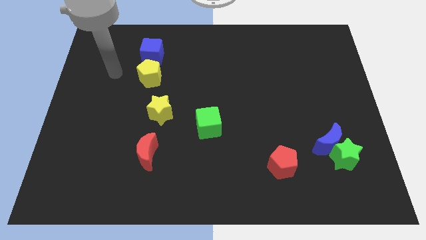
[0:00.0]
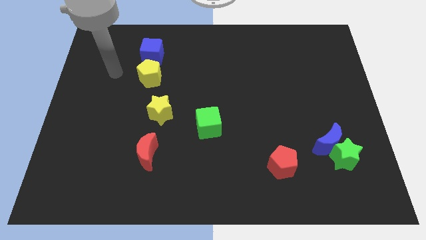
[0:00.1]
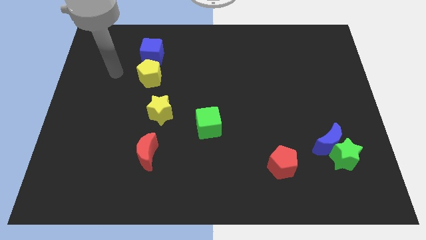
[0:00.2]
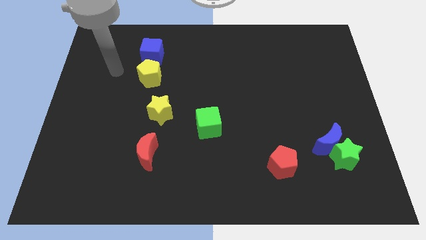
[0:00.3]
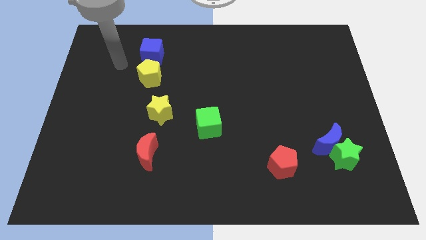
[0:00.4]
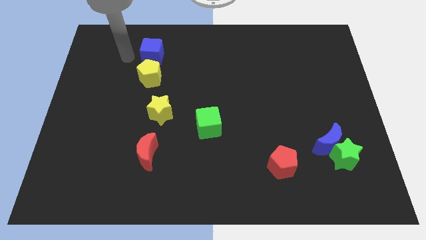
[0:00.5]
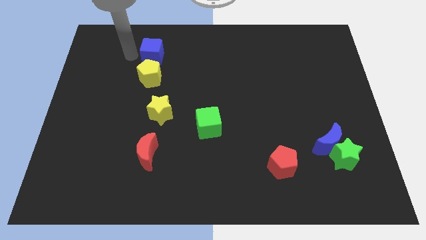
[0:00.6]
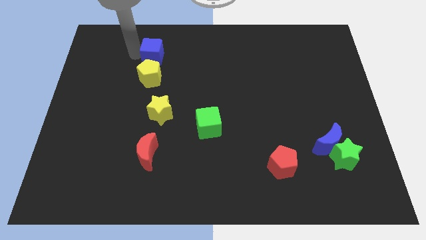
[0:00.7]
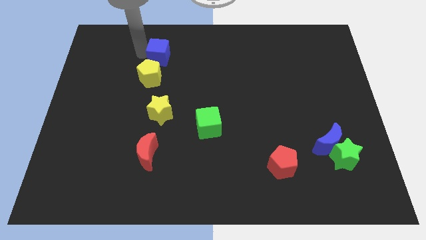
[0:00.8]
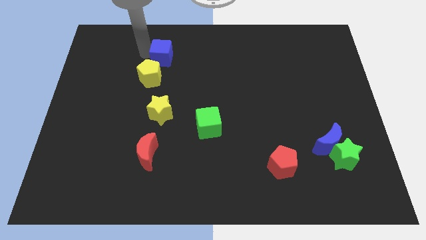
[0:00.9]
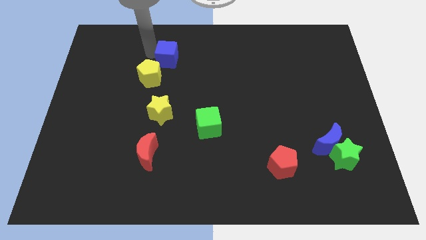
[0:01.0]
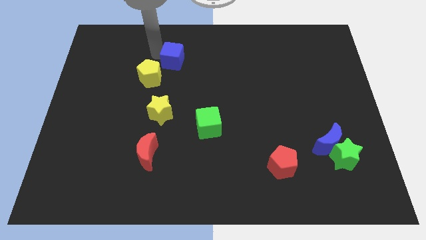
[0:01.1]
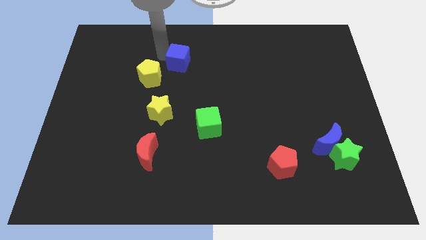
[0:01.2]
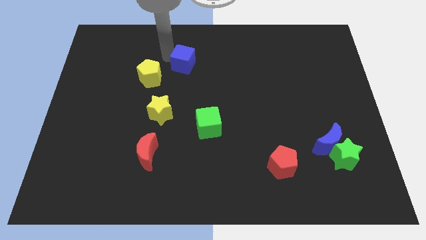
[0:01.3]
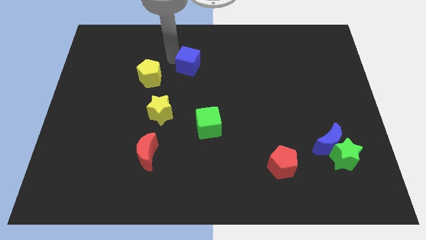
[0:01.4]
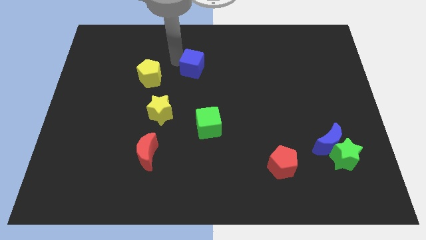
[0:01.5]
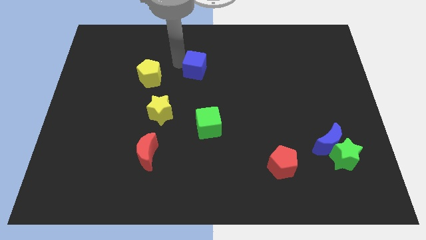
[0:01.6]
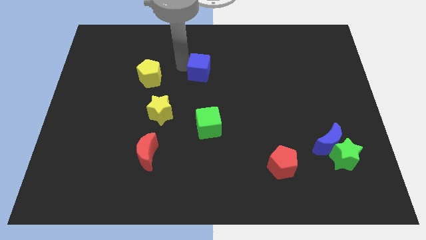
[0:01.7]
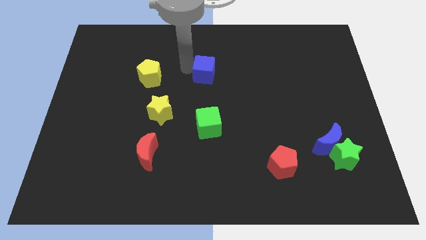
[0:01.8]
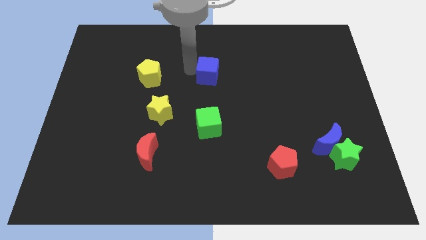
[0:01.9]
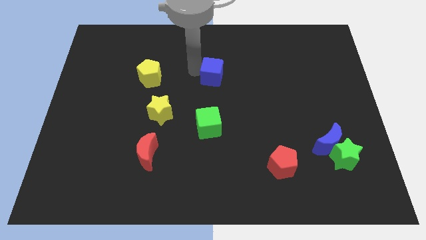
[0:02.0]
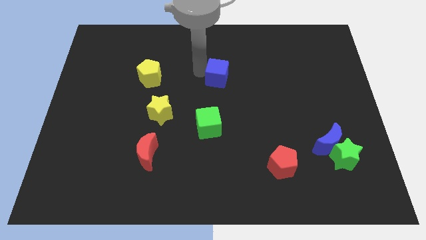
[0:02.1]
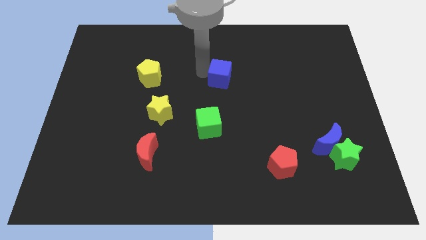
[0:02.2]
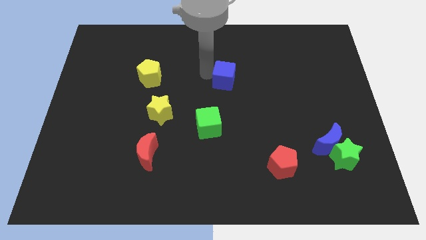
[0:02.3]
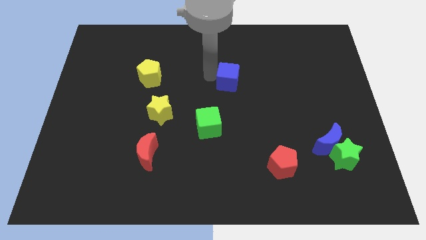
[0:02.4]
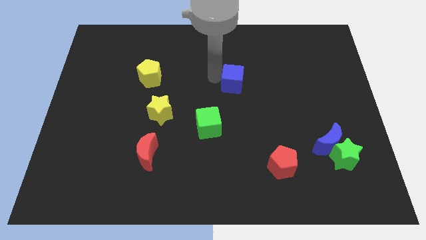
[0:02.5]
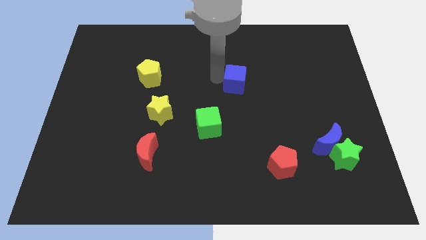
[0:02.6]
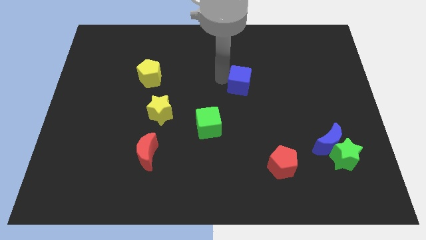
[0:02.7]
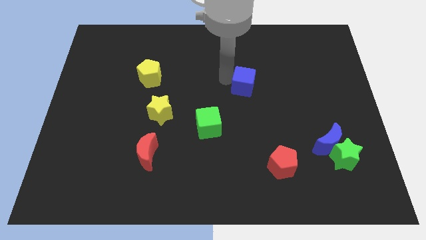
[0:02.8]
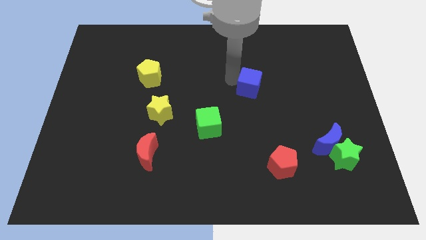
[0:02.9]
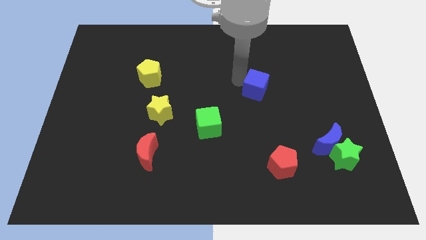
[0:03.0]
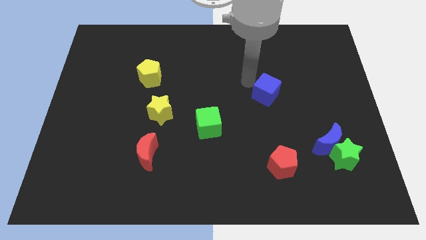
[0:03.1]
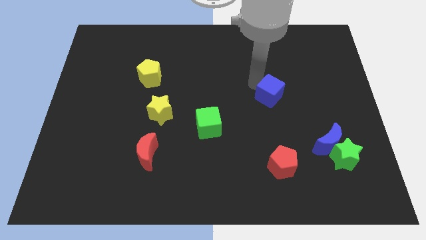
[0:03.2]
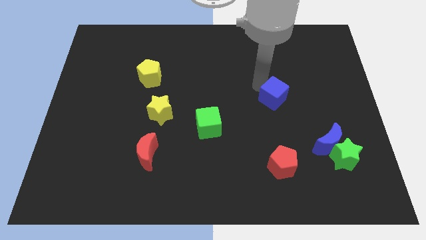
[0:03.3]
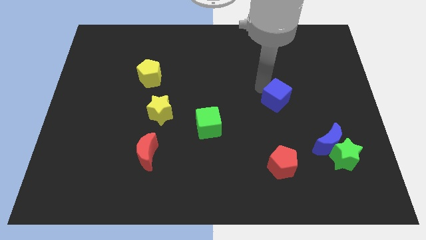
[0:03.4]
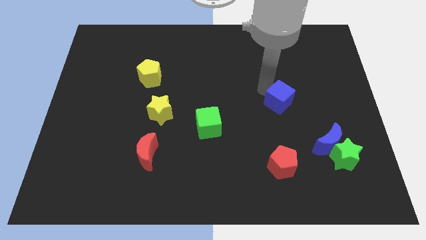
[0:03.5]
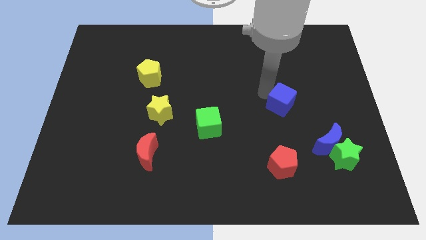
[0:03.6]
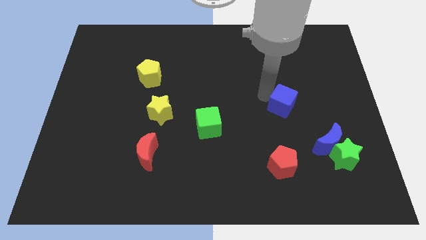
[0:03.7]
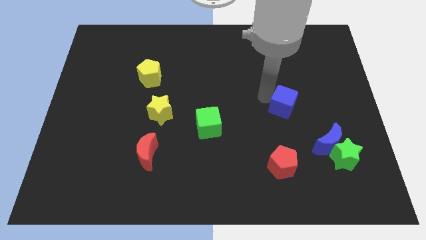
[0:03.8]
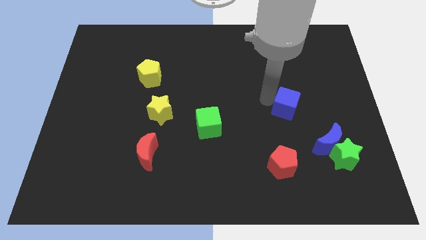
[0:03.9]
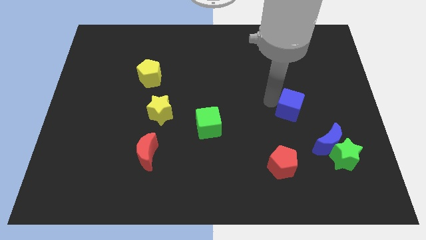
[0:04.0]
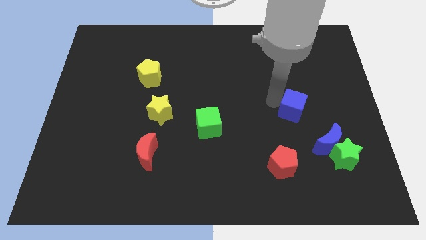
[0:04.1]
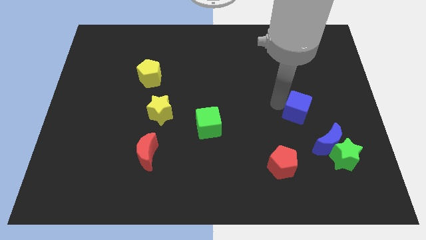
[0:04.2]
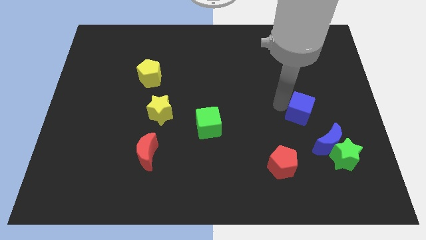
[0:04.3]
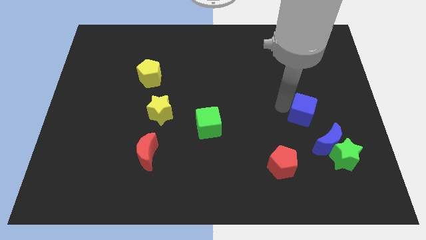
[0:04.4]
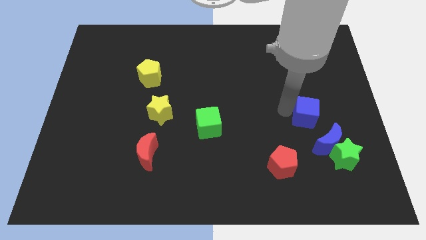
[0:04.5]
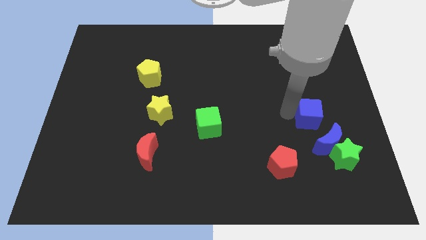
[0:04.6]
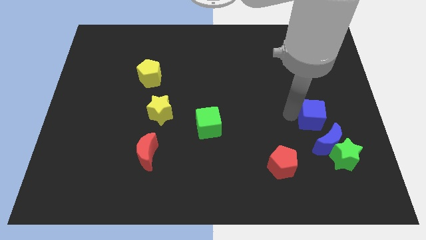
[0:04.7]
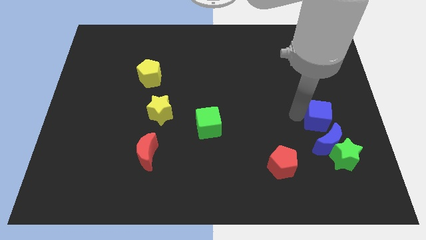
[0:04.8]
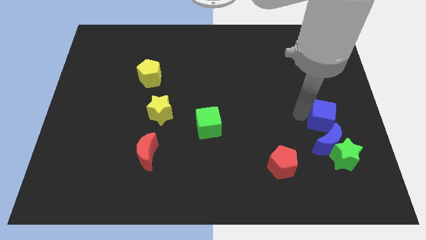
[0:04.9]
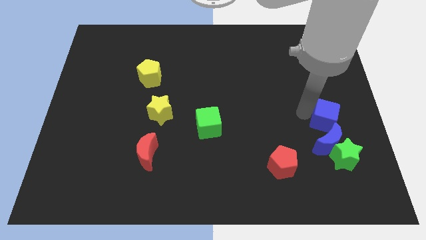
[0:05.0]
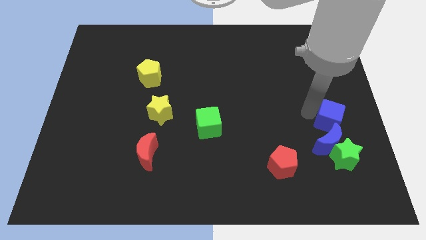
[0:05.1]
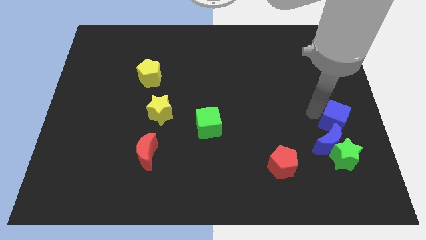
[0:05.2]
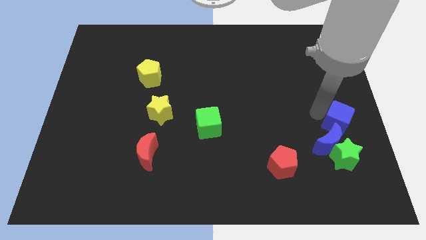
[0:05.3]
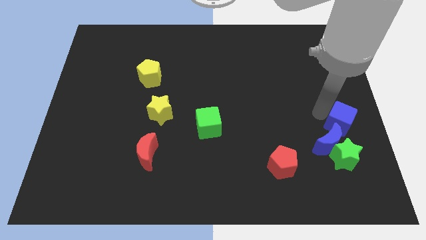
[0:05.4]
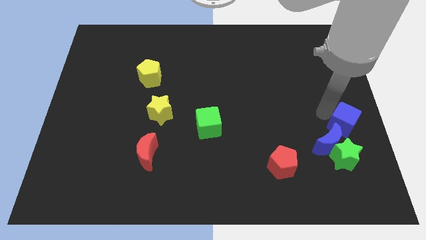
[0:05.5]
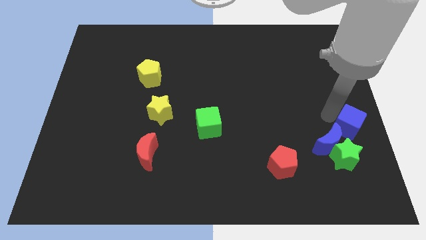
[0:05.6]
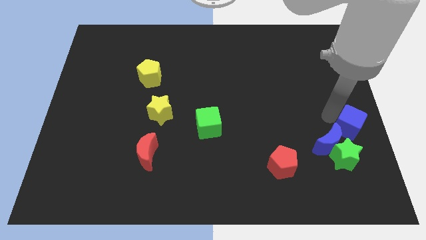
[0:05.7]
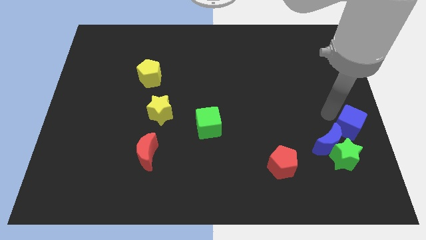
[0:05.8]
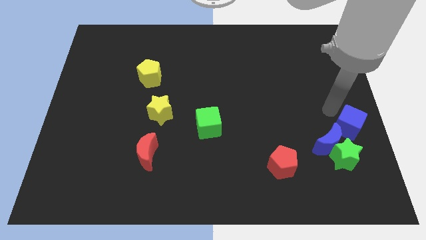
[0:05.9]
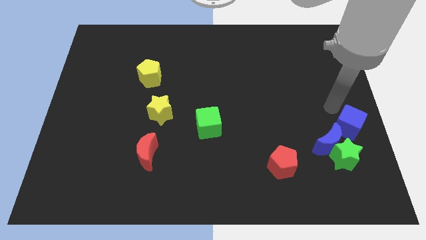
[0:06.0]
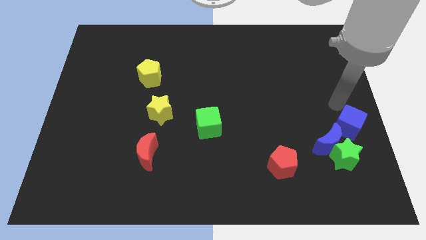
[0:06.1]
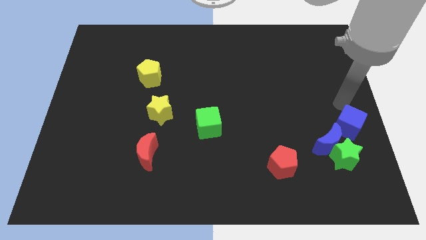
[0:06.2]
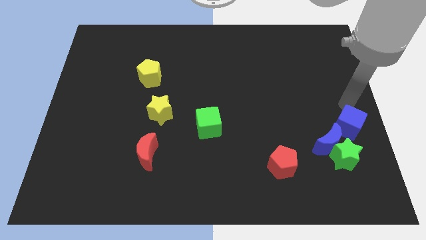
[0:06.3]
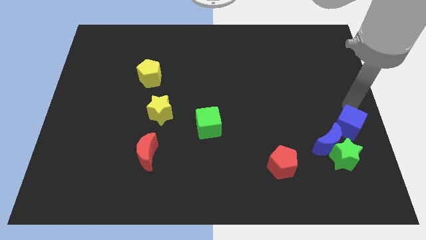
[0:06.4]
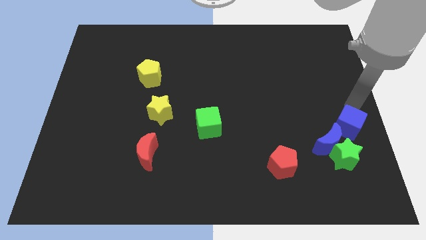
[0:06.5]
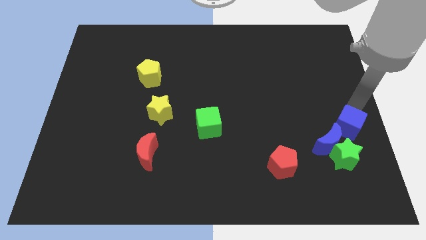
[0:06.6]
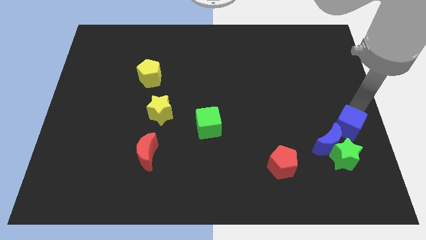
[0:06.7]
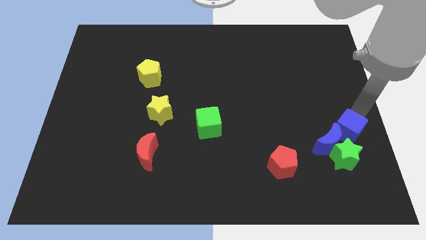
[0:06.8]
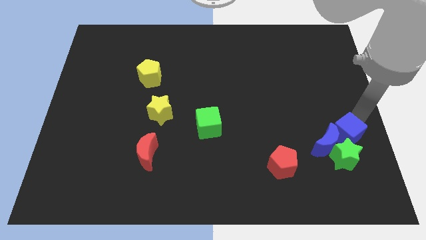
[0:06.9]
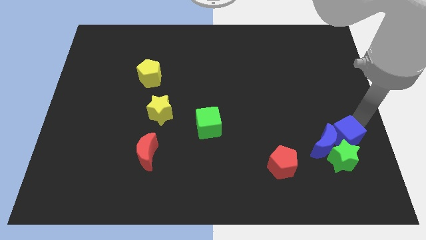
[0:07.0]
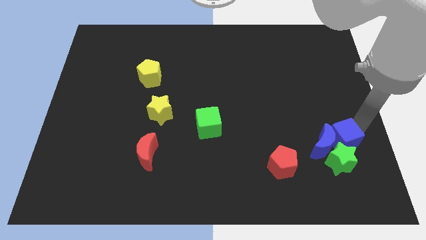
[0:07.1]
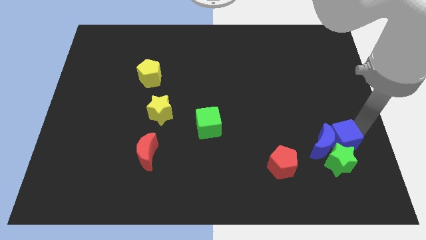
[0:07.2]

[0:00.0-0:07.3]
move the blue cube towards the green star

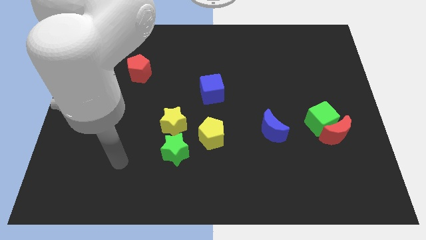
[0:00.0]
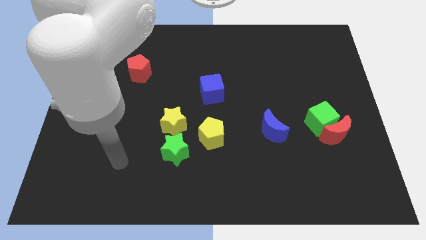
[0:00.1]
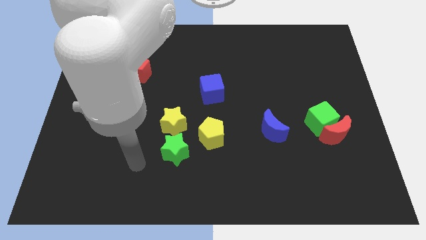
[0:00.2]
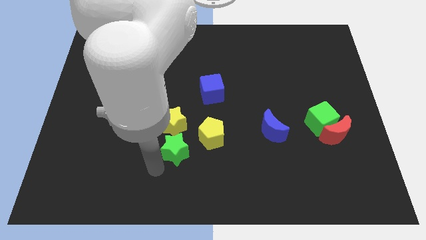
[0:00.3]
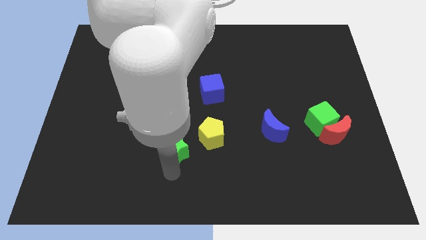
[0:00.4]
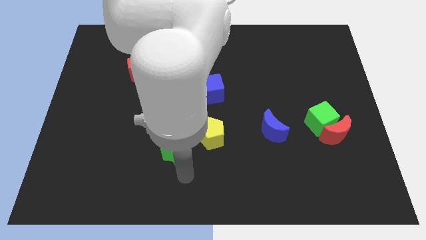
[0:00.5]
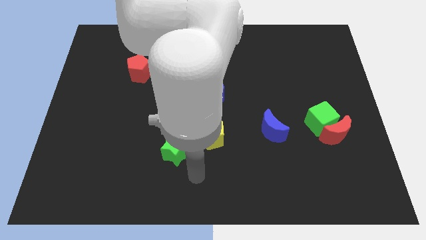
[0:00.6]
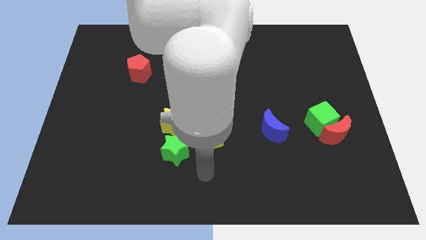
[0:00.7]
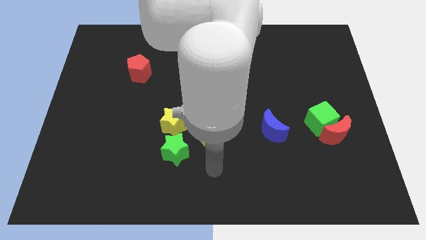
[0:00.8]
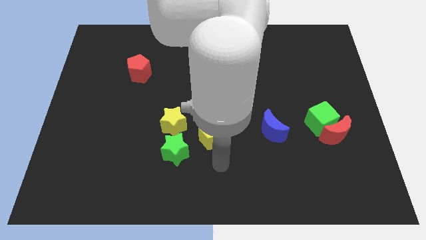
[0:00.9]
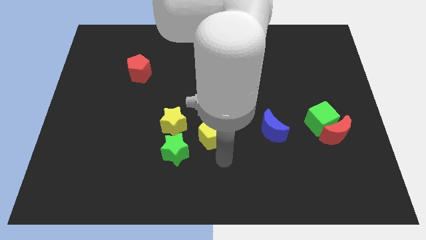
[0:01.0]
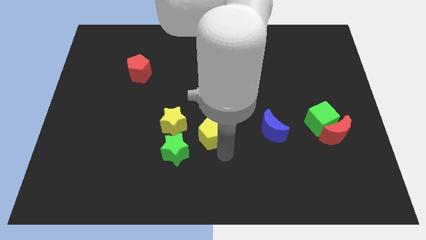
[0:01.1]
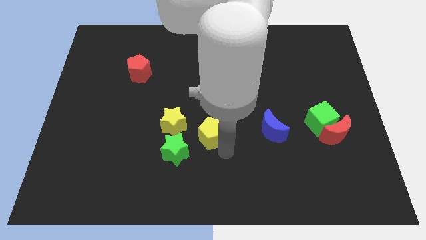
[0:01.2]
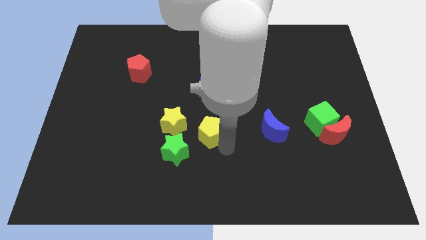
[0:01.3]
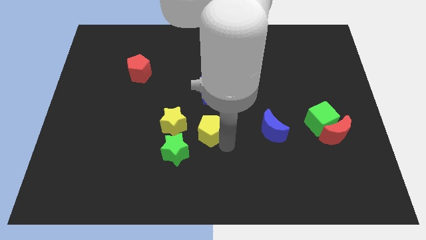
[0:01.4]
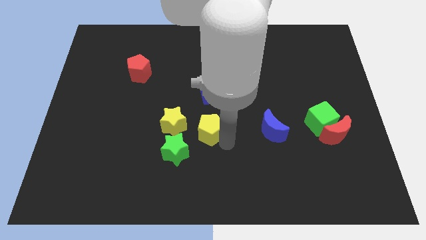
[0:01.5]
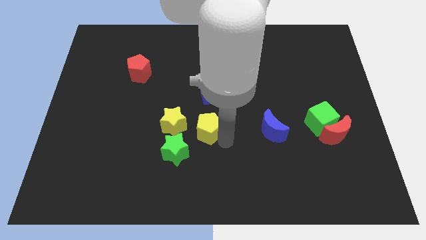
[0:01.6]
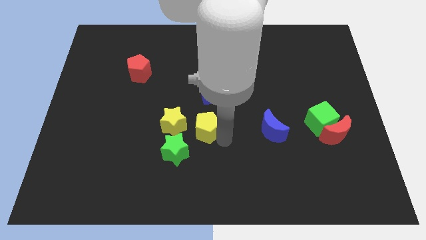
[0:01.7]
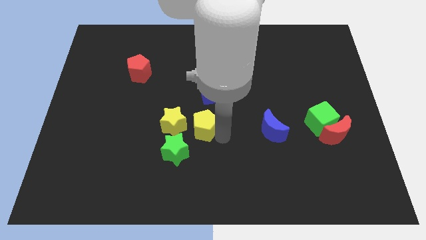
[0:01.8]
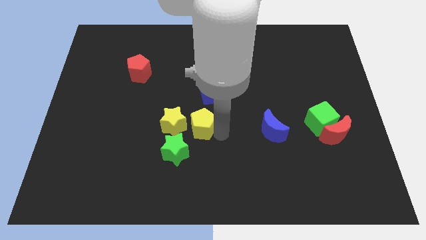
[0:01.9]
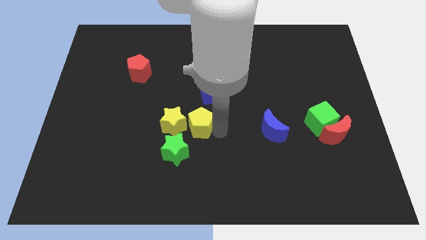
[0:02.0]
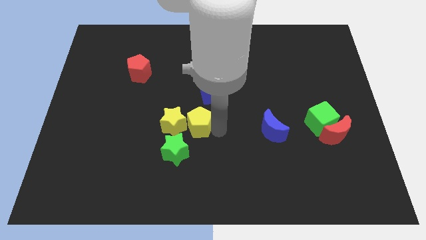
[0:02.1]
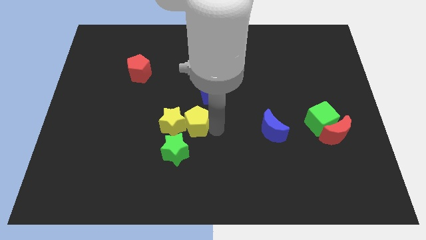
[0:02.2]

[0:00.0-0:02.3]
push the yellow pentagon next to the yellow star
